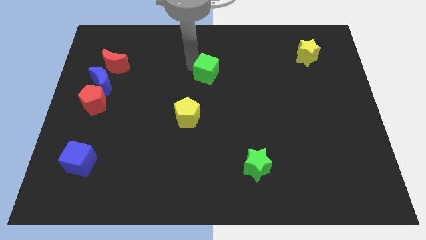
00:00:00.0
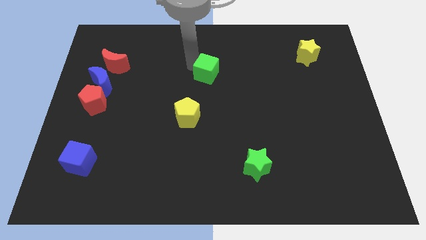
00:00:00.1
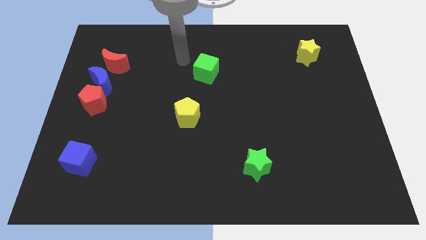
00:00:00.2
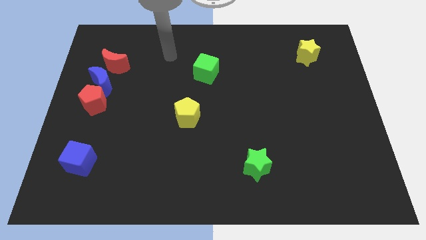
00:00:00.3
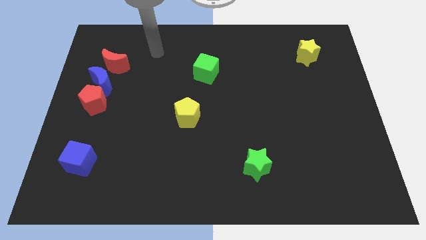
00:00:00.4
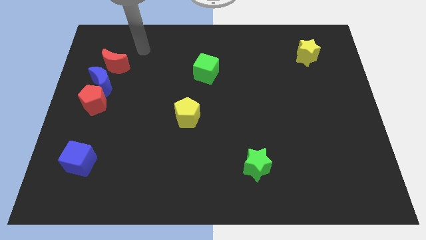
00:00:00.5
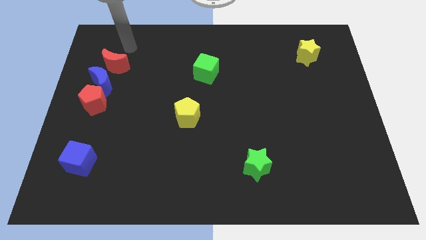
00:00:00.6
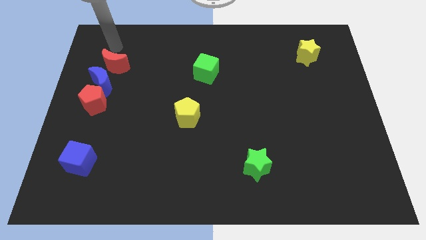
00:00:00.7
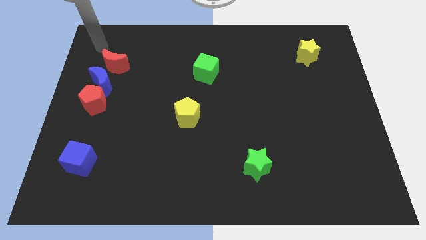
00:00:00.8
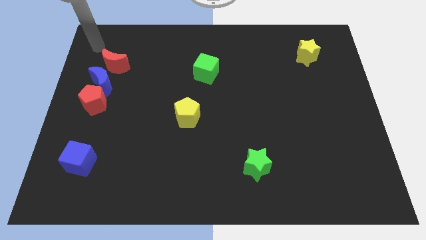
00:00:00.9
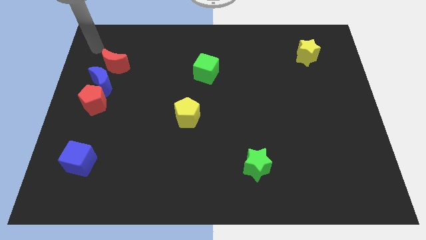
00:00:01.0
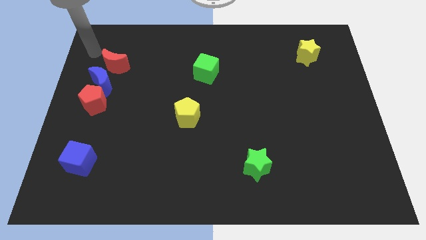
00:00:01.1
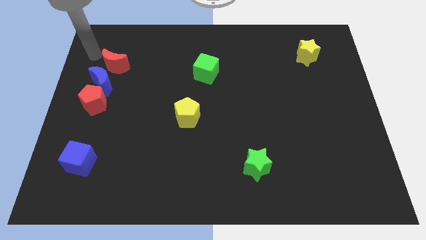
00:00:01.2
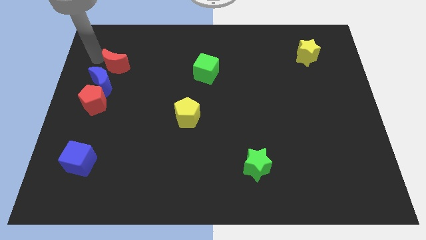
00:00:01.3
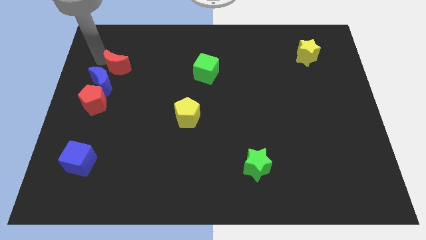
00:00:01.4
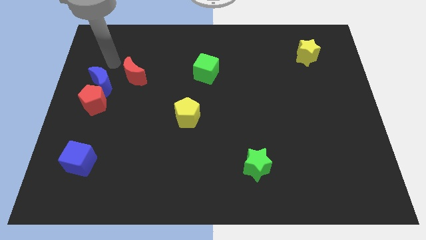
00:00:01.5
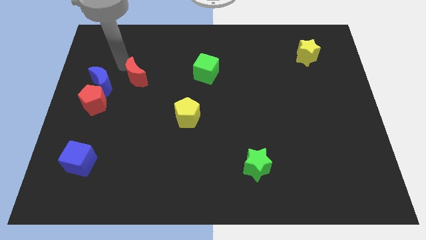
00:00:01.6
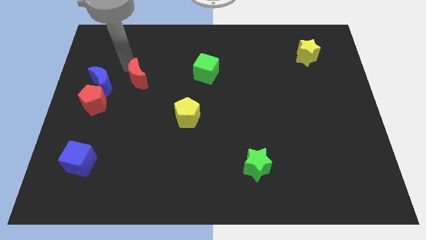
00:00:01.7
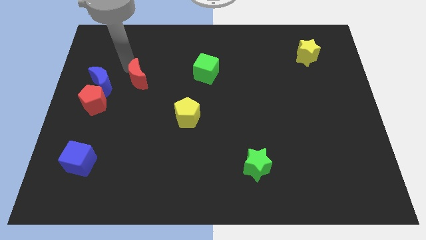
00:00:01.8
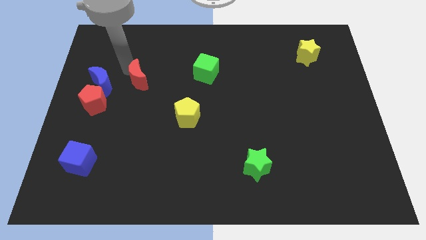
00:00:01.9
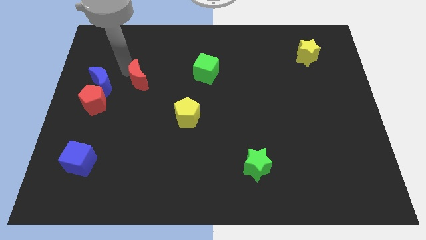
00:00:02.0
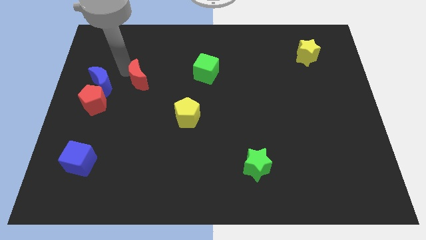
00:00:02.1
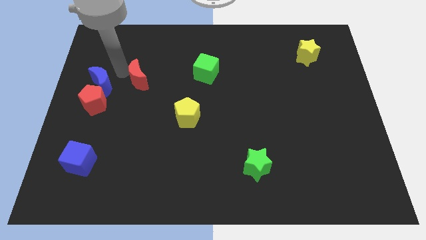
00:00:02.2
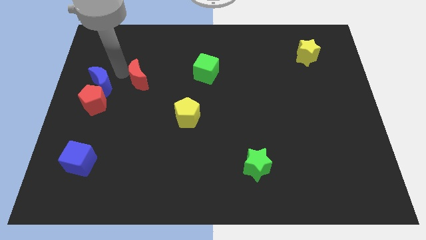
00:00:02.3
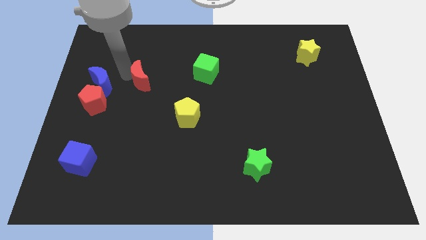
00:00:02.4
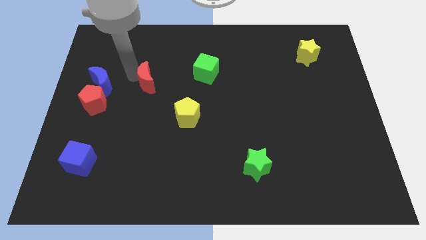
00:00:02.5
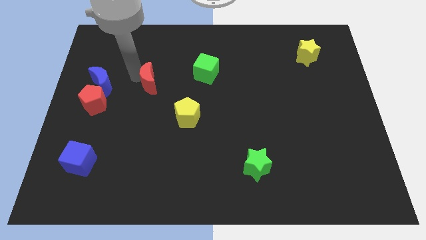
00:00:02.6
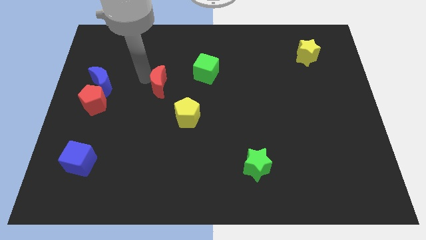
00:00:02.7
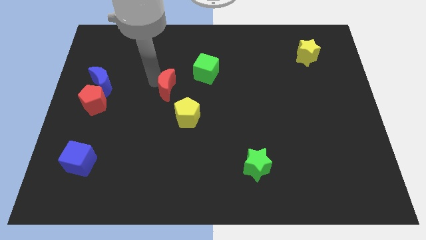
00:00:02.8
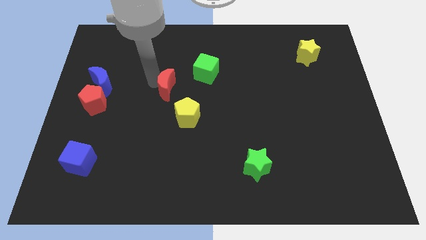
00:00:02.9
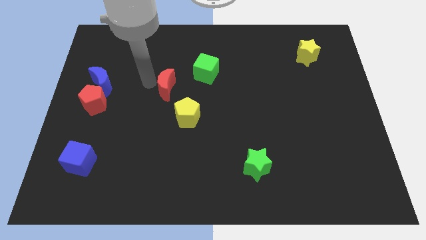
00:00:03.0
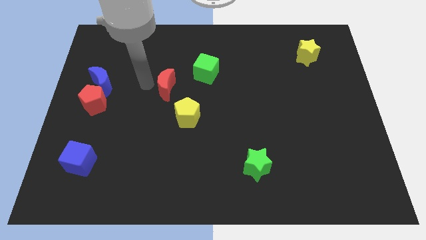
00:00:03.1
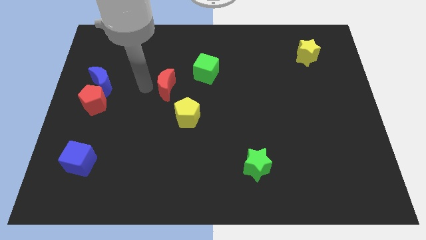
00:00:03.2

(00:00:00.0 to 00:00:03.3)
push the red crescent at the top left side of the yellow pentagon

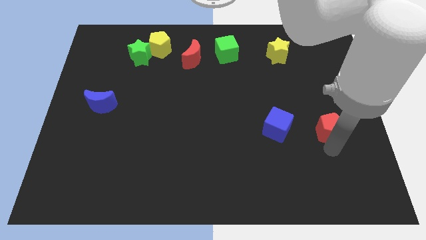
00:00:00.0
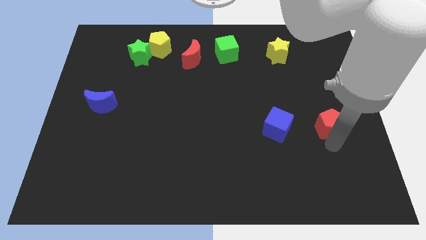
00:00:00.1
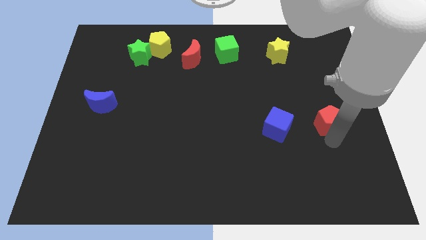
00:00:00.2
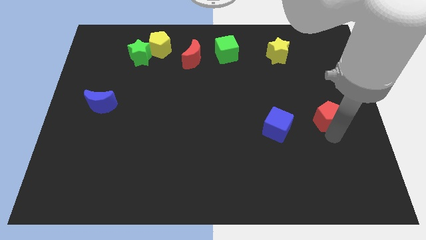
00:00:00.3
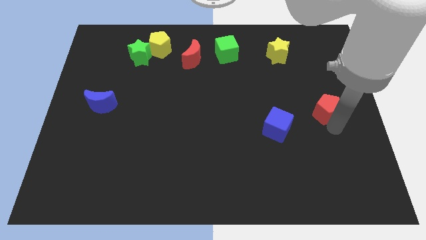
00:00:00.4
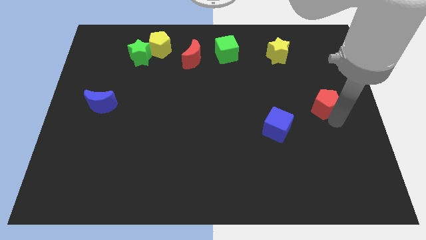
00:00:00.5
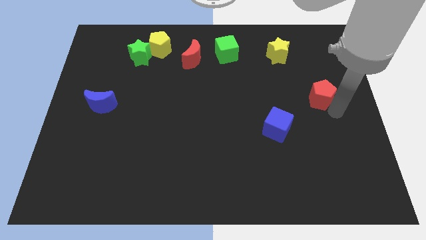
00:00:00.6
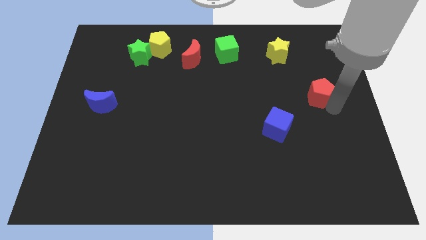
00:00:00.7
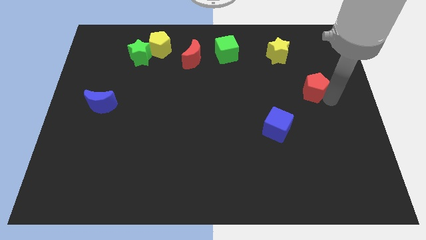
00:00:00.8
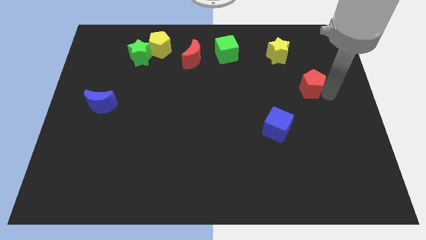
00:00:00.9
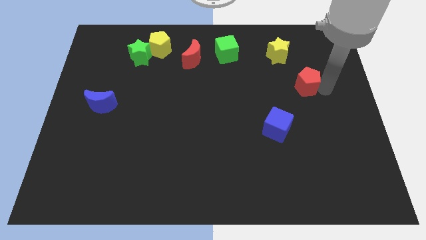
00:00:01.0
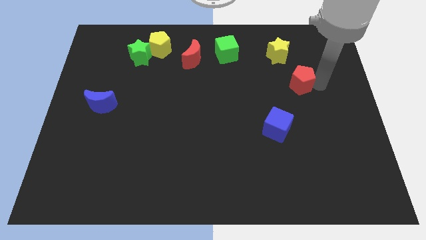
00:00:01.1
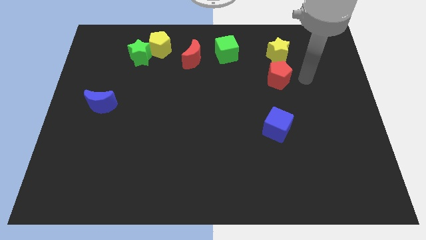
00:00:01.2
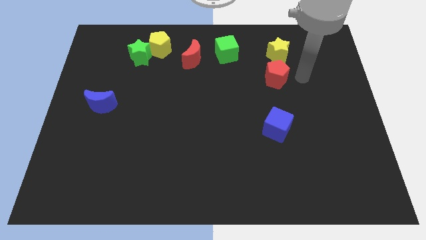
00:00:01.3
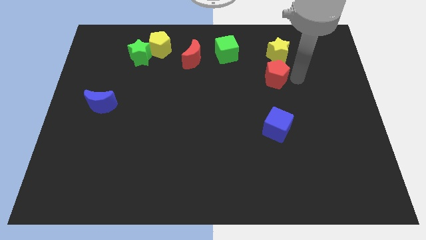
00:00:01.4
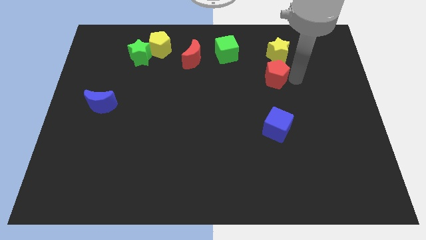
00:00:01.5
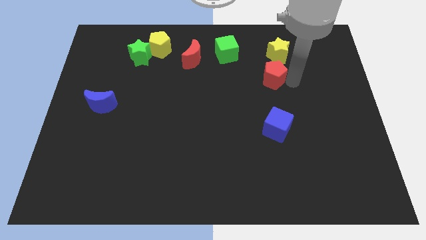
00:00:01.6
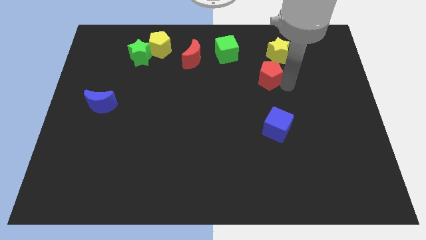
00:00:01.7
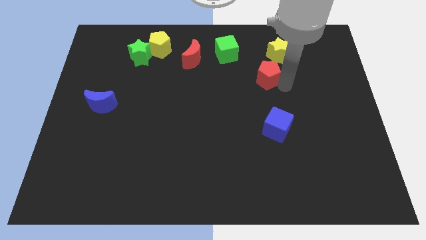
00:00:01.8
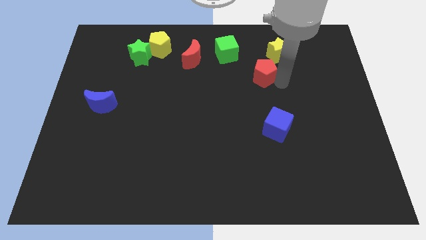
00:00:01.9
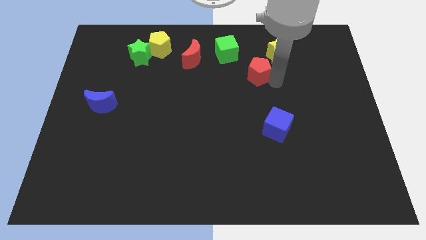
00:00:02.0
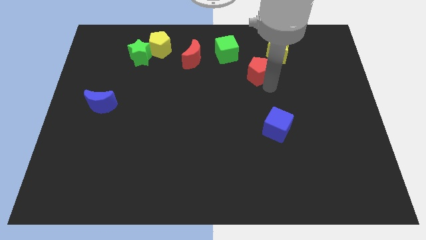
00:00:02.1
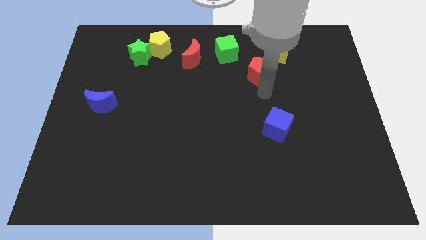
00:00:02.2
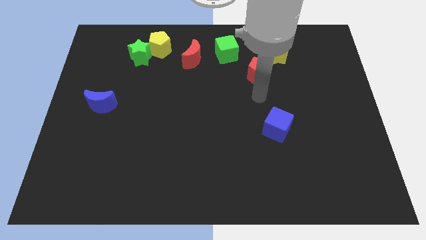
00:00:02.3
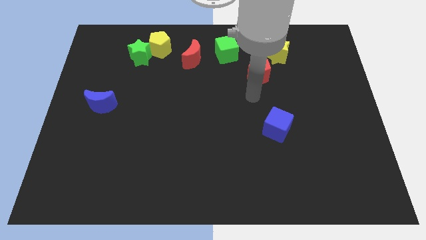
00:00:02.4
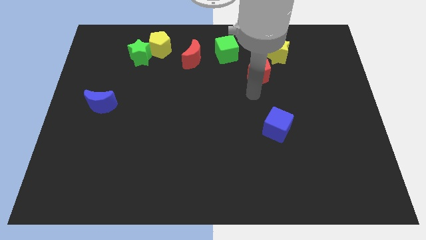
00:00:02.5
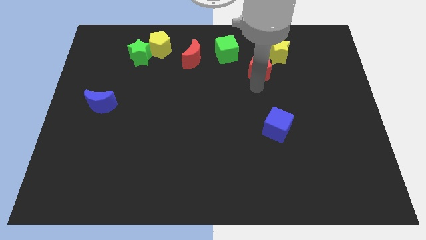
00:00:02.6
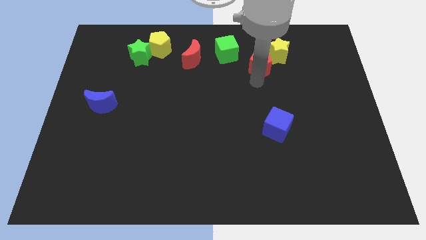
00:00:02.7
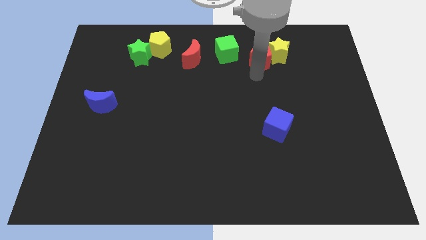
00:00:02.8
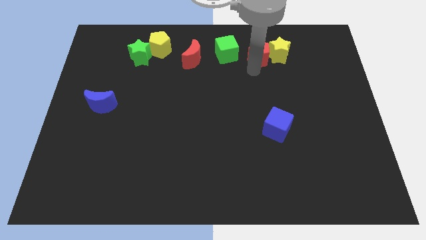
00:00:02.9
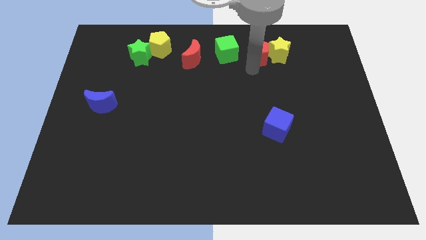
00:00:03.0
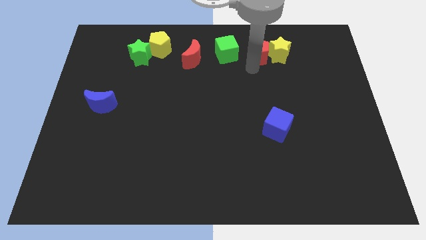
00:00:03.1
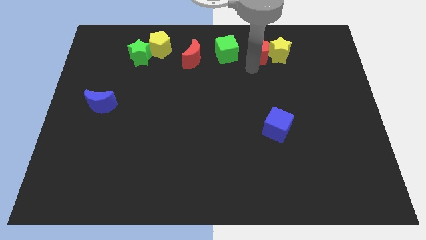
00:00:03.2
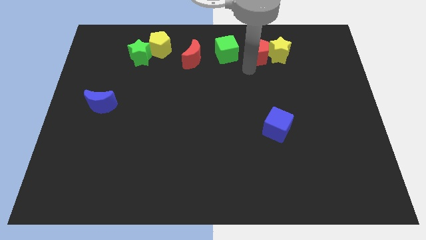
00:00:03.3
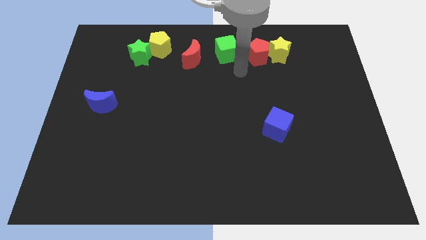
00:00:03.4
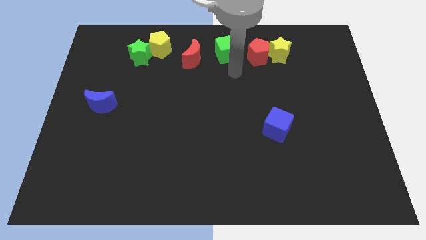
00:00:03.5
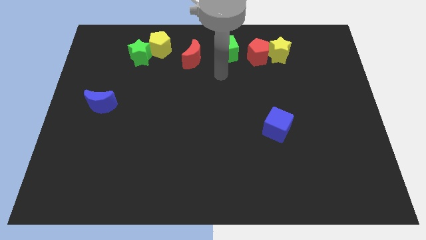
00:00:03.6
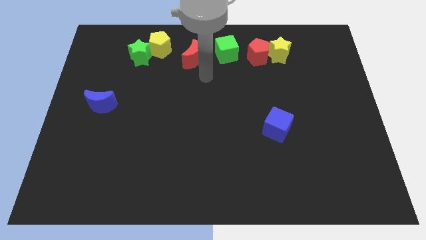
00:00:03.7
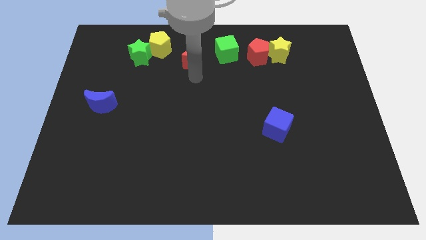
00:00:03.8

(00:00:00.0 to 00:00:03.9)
push the red pentagon into the yellow star

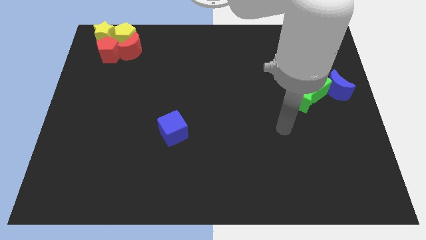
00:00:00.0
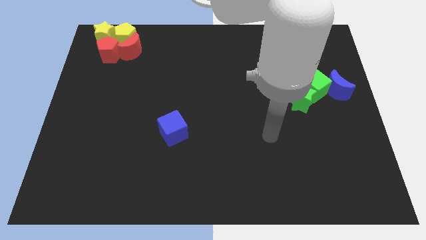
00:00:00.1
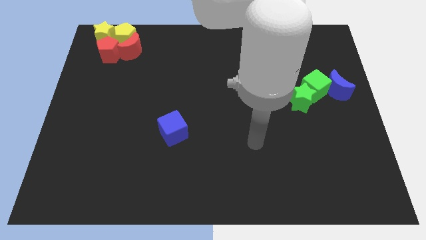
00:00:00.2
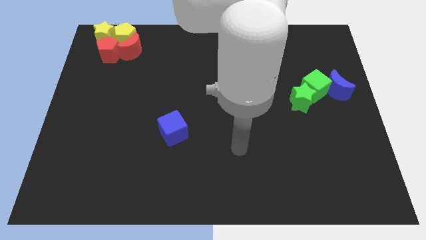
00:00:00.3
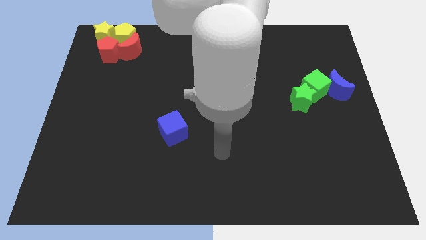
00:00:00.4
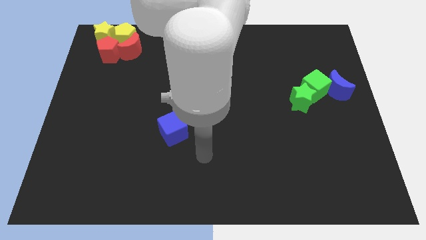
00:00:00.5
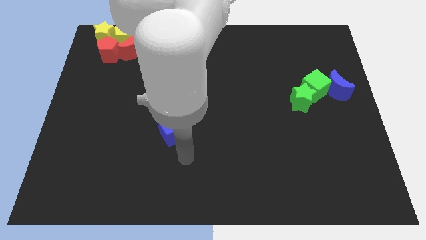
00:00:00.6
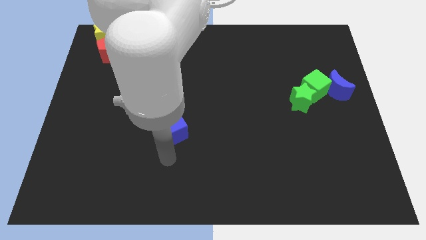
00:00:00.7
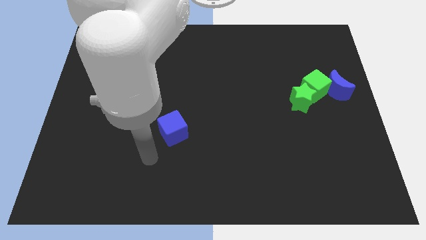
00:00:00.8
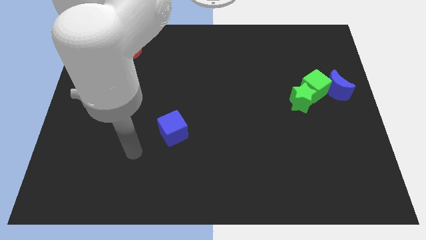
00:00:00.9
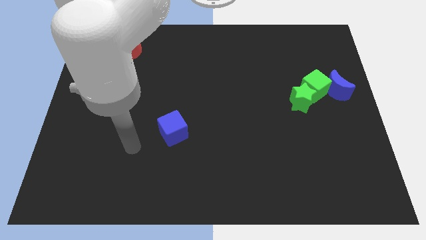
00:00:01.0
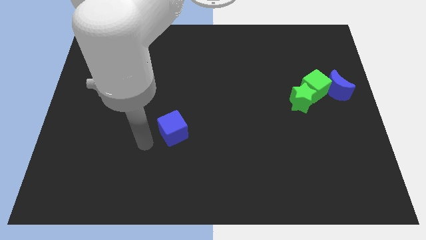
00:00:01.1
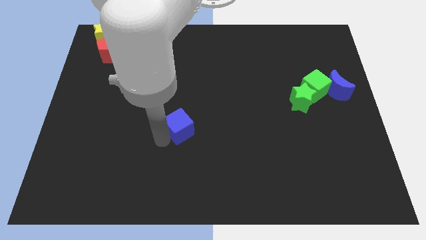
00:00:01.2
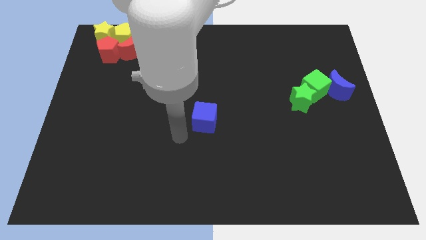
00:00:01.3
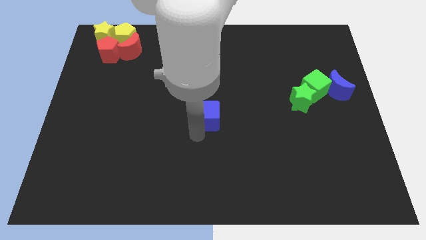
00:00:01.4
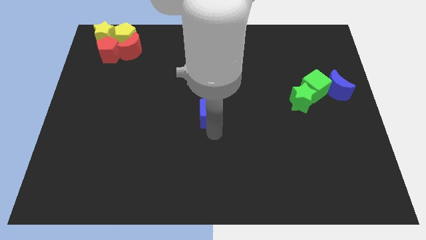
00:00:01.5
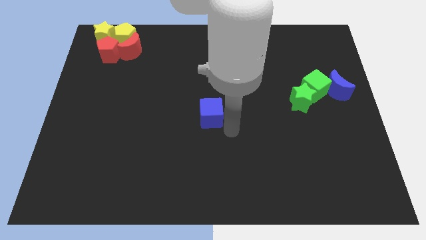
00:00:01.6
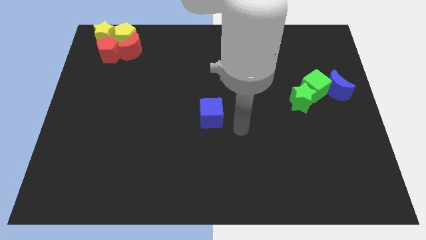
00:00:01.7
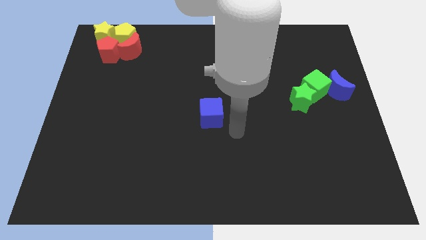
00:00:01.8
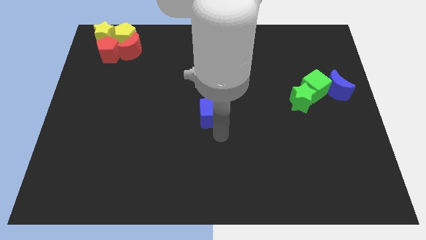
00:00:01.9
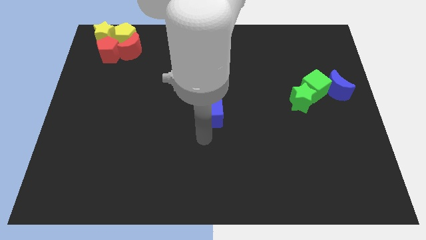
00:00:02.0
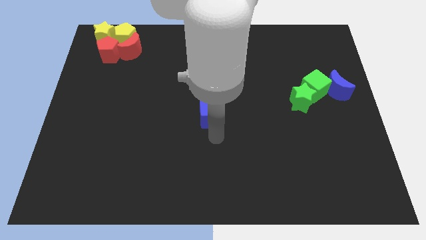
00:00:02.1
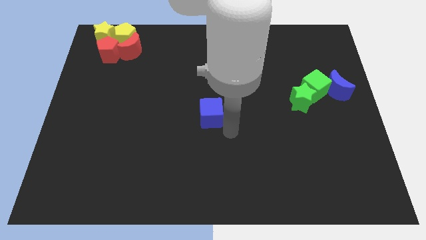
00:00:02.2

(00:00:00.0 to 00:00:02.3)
push the blue cube to the center of the board
